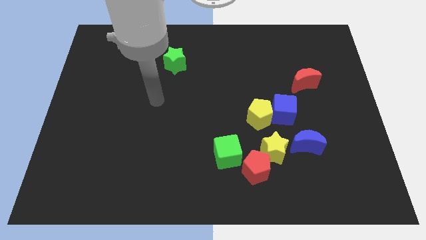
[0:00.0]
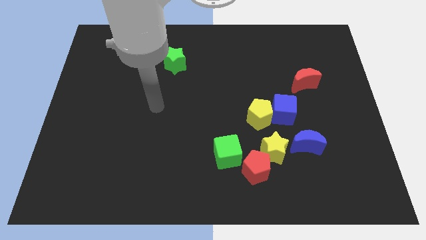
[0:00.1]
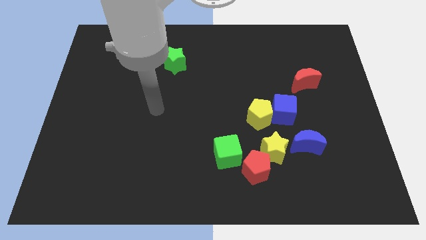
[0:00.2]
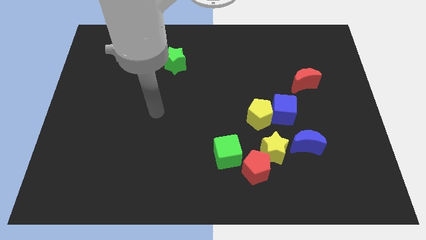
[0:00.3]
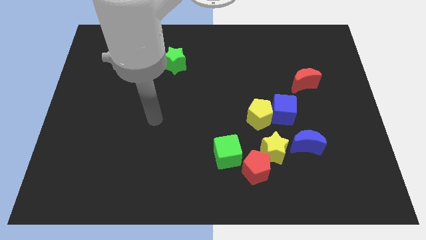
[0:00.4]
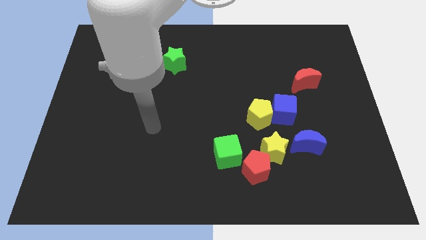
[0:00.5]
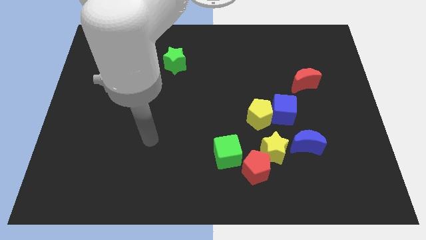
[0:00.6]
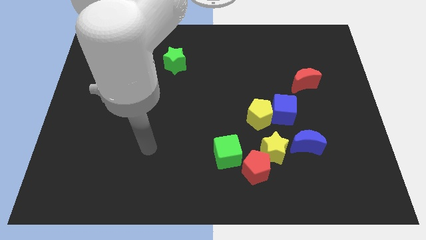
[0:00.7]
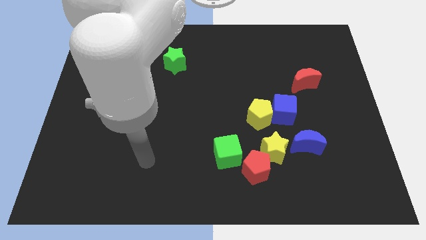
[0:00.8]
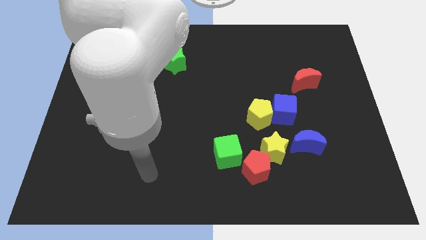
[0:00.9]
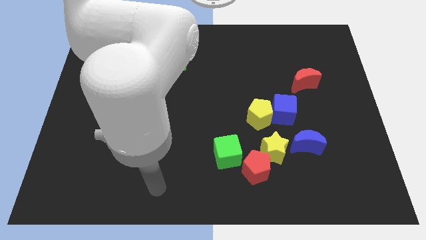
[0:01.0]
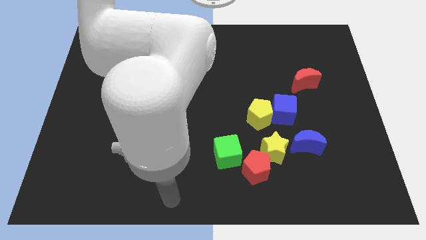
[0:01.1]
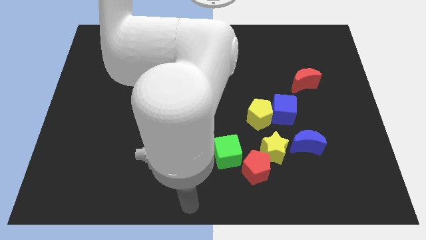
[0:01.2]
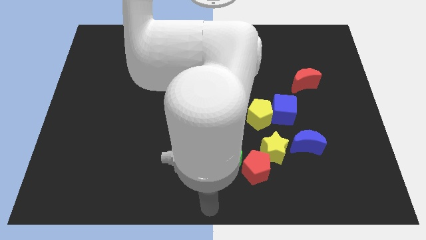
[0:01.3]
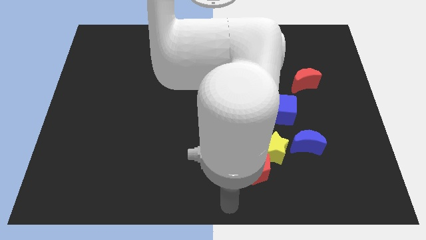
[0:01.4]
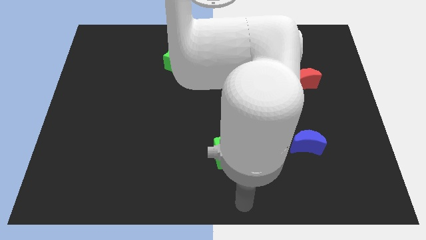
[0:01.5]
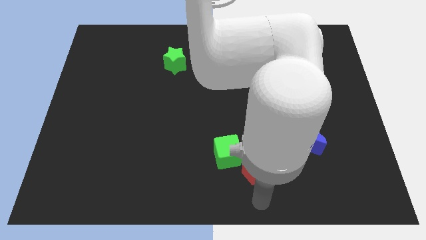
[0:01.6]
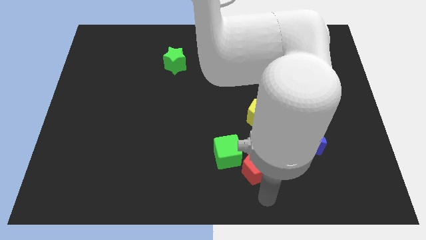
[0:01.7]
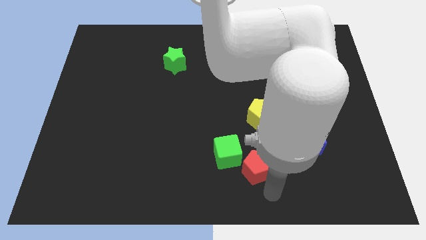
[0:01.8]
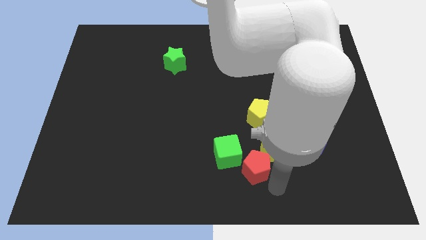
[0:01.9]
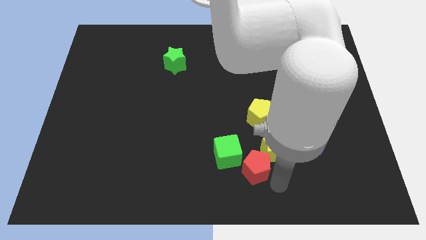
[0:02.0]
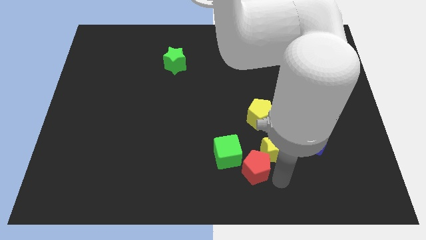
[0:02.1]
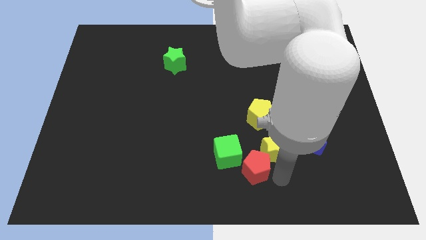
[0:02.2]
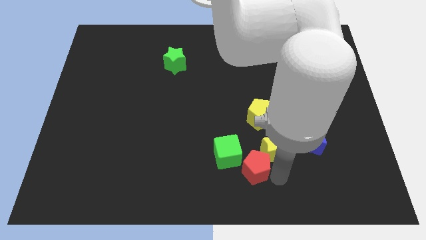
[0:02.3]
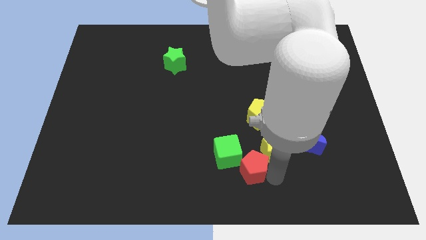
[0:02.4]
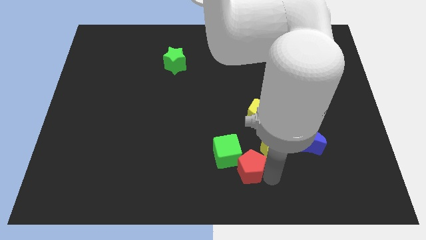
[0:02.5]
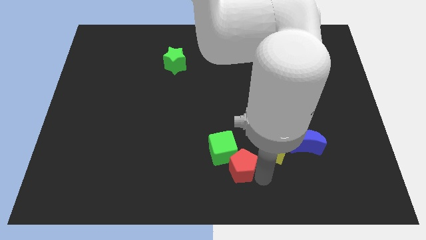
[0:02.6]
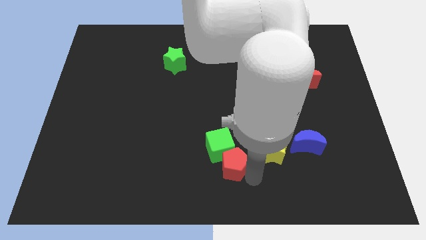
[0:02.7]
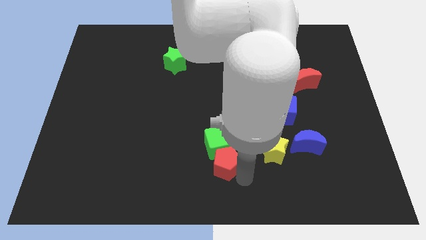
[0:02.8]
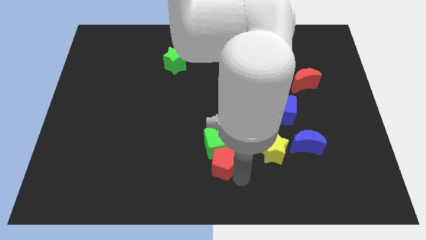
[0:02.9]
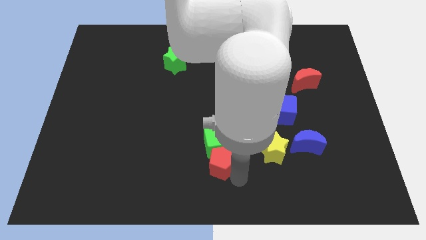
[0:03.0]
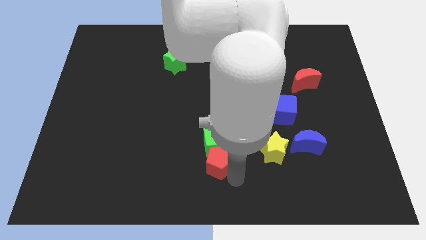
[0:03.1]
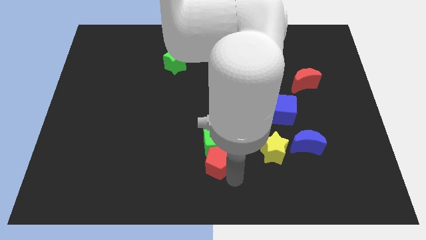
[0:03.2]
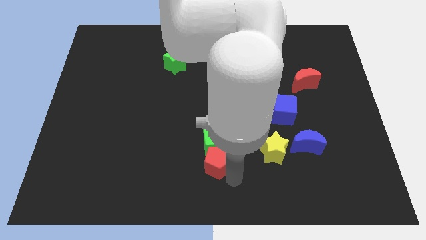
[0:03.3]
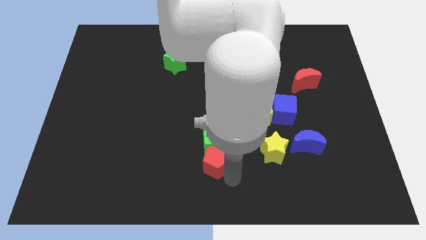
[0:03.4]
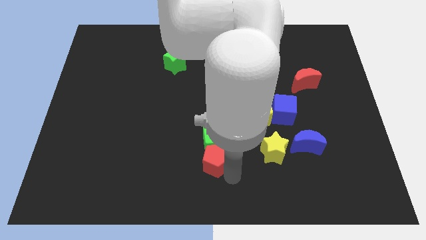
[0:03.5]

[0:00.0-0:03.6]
slide the red pentagon slightly to the left

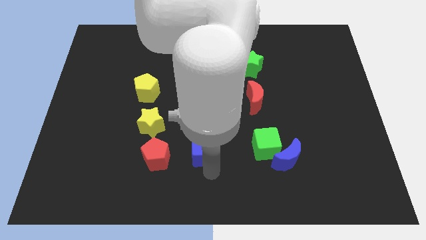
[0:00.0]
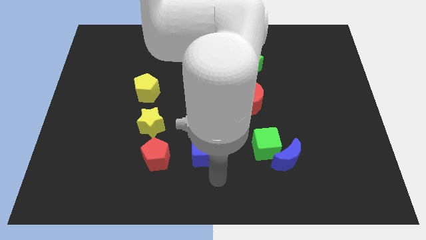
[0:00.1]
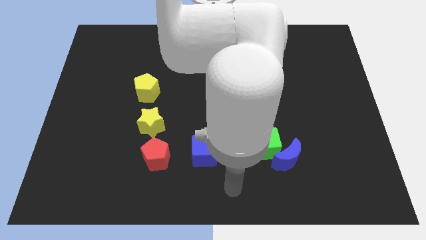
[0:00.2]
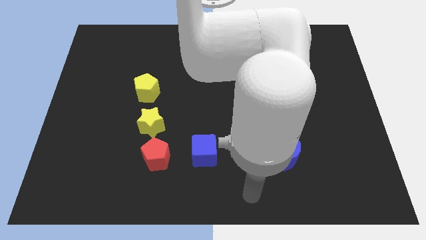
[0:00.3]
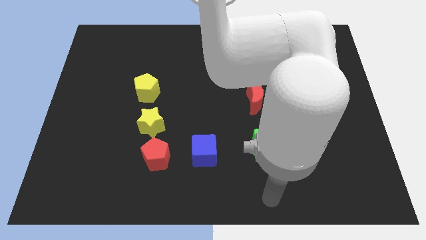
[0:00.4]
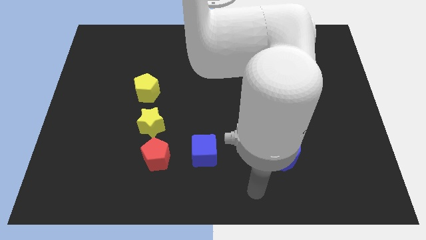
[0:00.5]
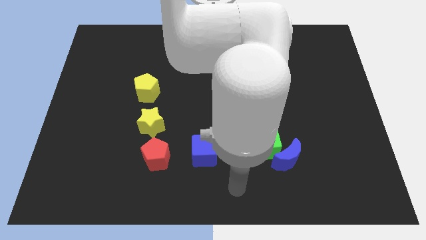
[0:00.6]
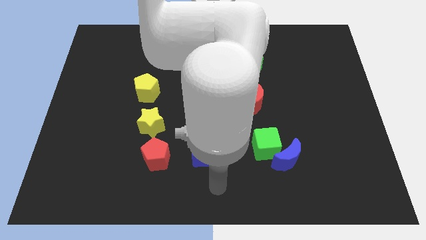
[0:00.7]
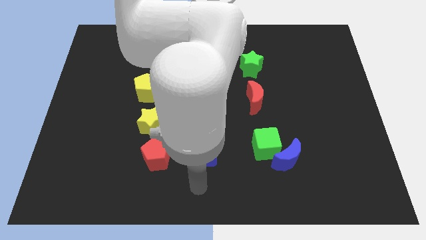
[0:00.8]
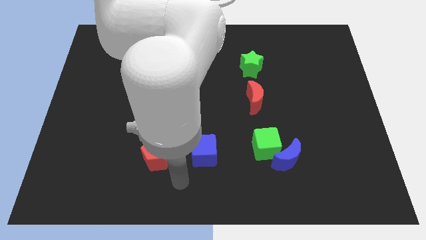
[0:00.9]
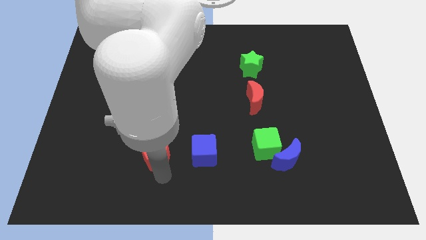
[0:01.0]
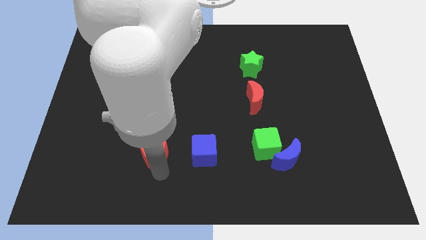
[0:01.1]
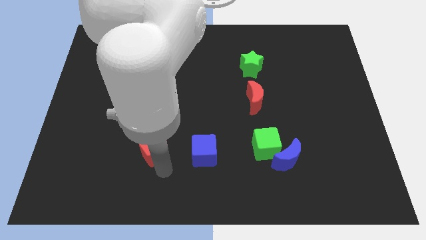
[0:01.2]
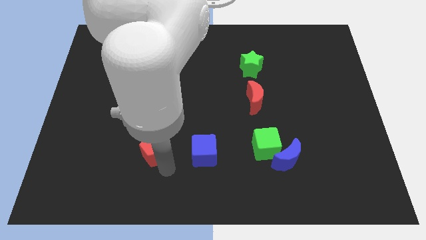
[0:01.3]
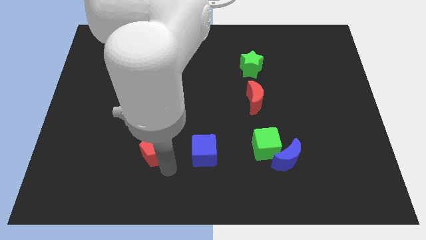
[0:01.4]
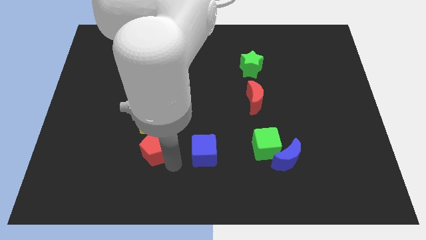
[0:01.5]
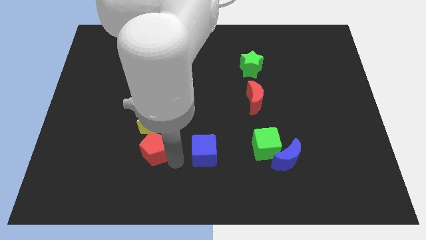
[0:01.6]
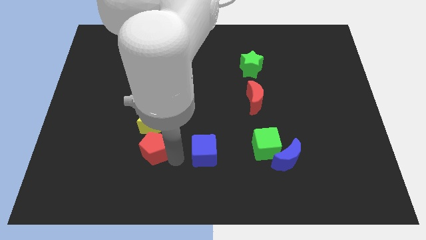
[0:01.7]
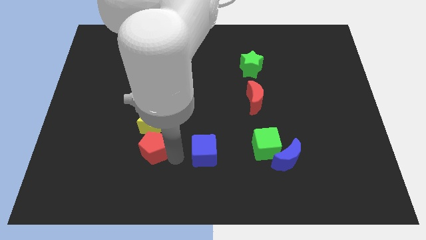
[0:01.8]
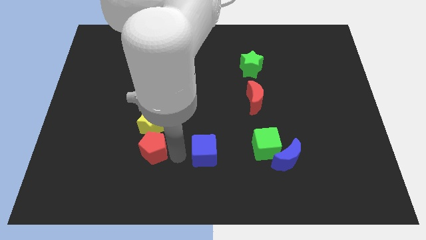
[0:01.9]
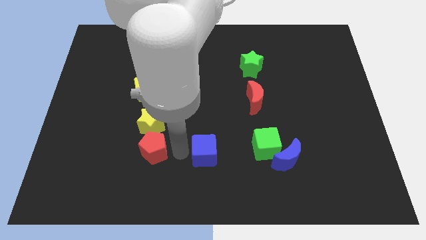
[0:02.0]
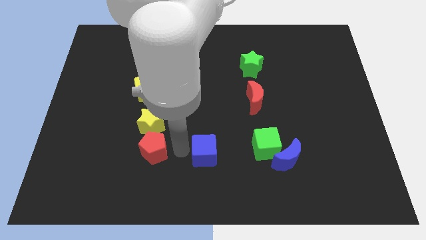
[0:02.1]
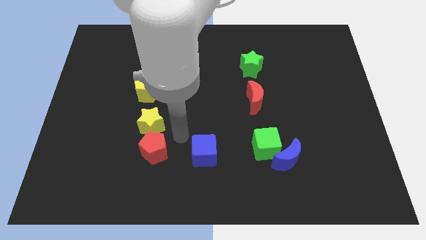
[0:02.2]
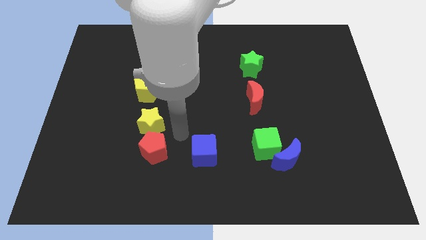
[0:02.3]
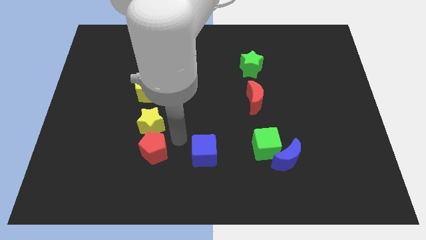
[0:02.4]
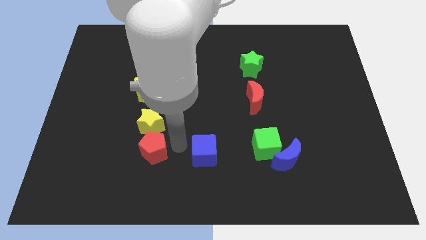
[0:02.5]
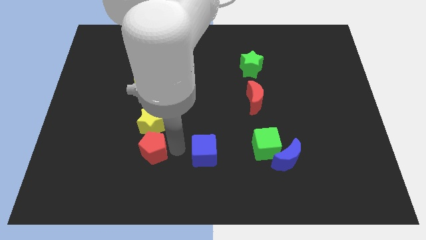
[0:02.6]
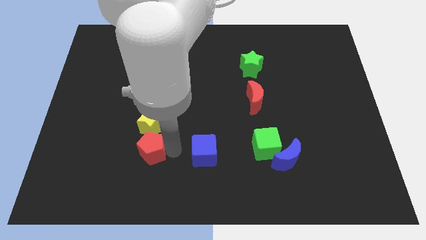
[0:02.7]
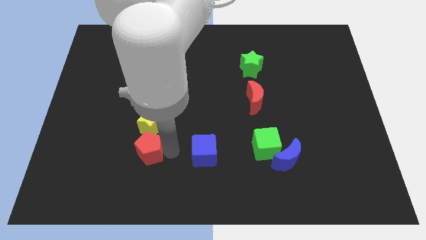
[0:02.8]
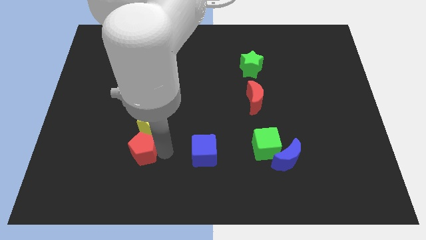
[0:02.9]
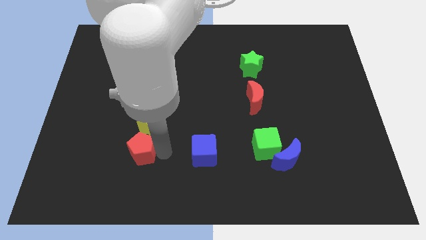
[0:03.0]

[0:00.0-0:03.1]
slightly touch red pentagon

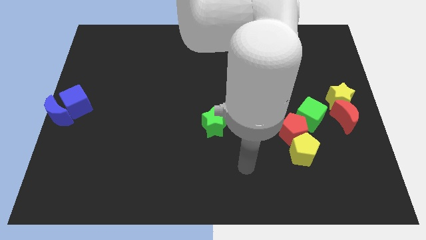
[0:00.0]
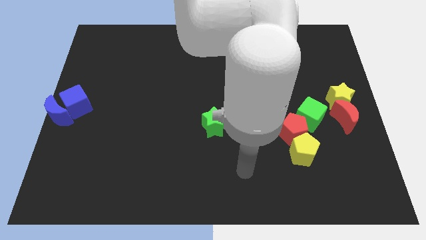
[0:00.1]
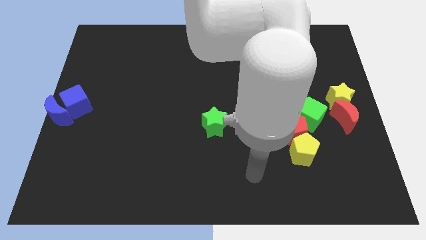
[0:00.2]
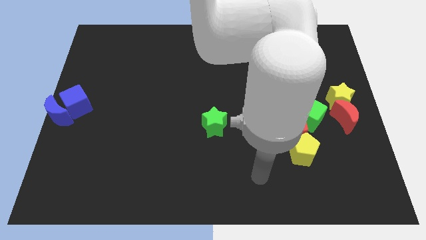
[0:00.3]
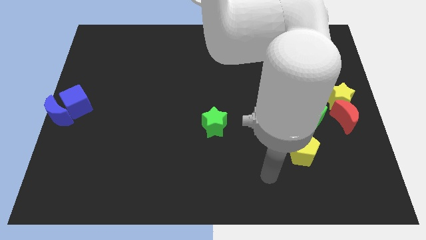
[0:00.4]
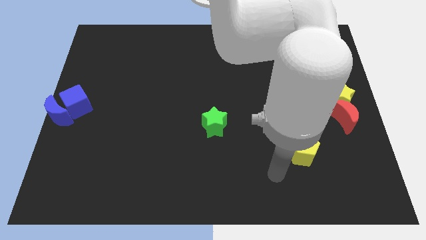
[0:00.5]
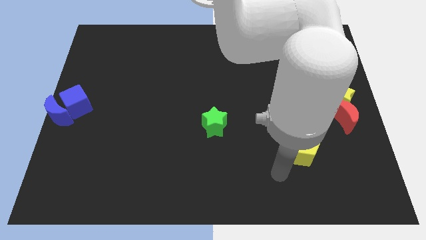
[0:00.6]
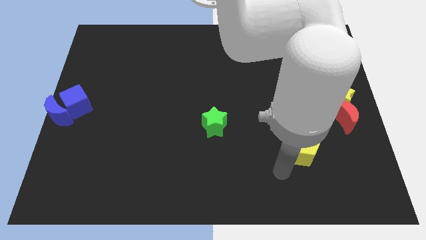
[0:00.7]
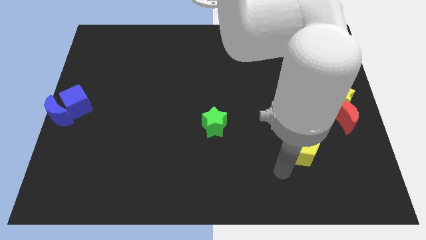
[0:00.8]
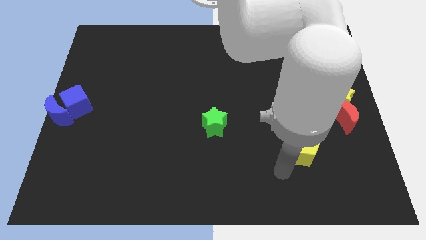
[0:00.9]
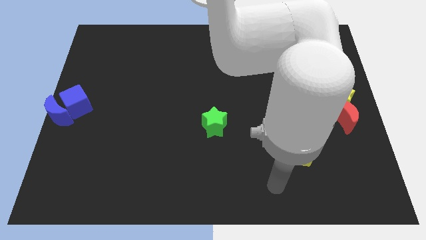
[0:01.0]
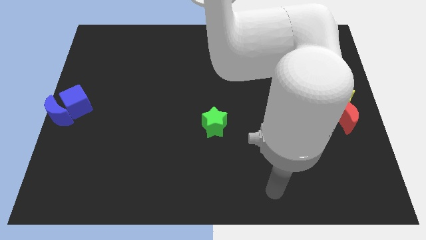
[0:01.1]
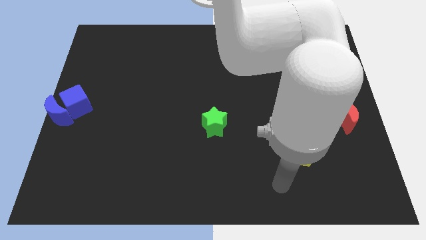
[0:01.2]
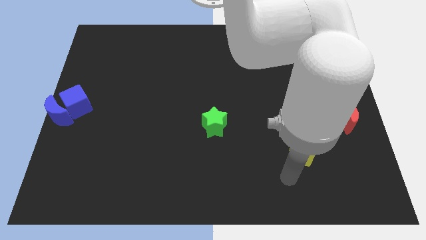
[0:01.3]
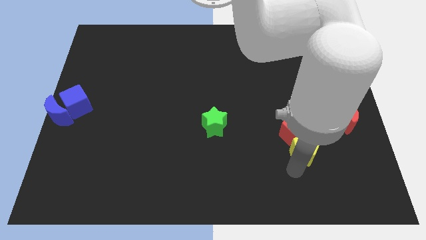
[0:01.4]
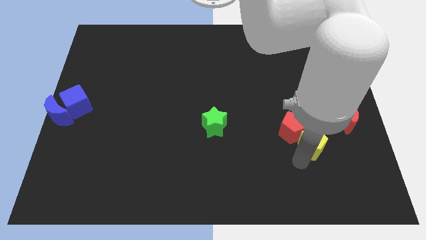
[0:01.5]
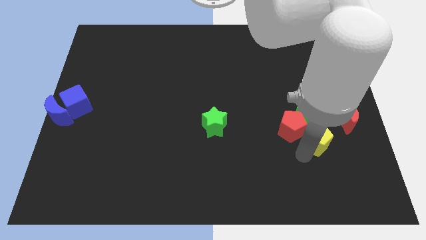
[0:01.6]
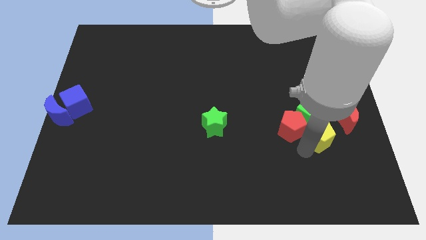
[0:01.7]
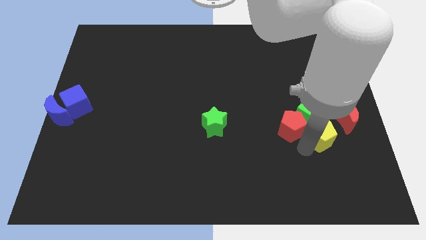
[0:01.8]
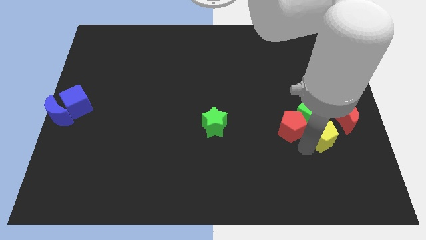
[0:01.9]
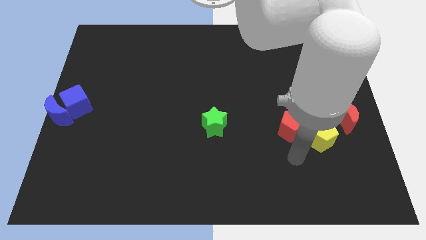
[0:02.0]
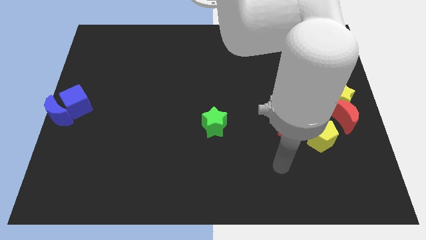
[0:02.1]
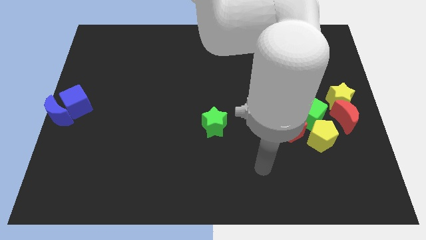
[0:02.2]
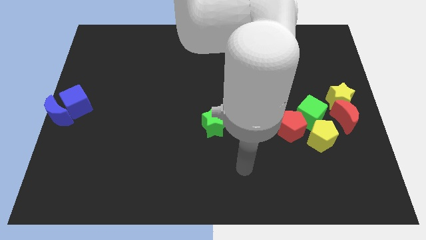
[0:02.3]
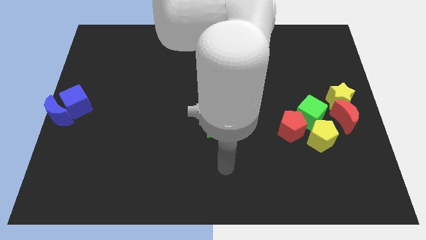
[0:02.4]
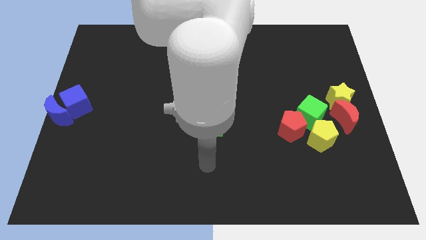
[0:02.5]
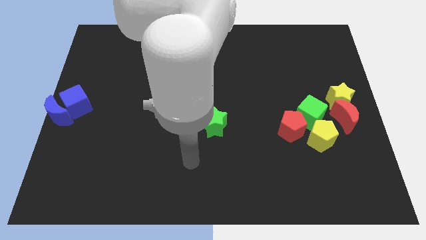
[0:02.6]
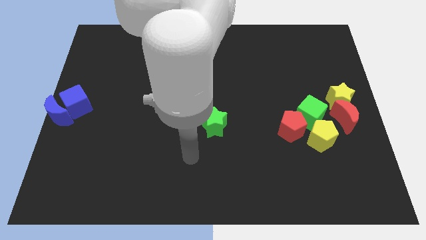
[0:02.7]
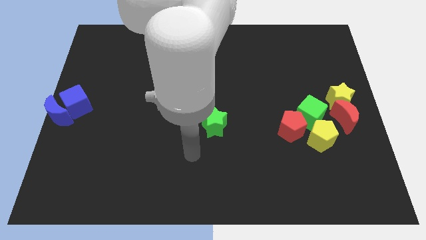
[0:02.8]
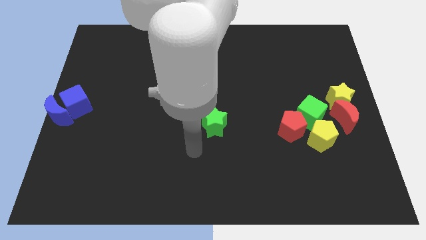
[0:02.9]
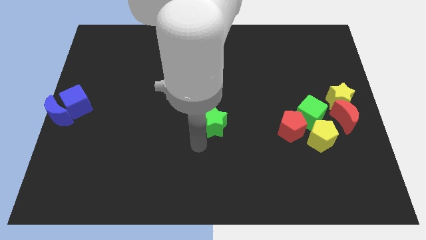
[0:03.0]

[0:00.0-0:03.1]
push yellow pentagon slightly upwards
